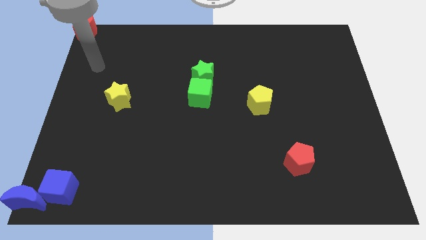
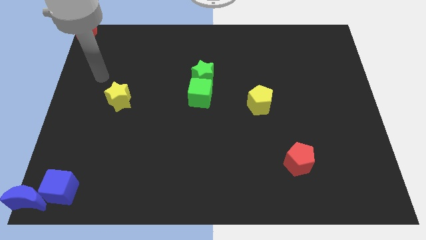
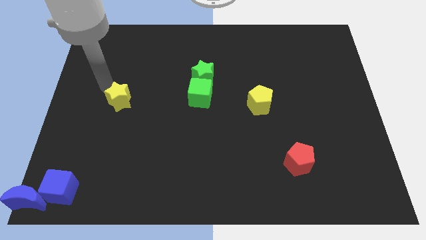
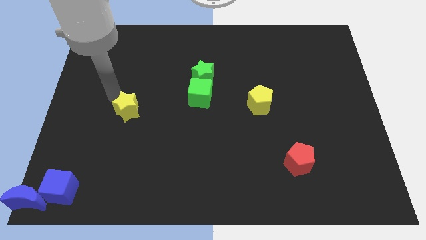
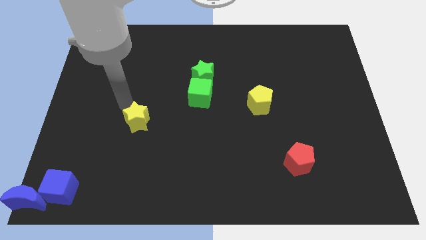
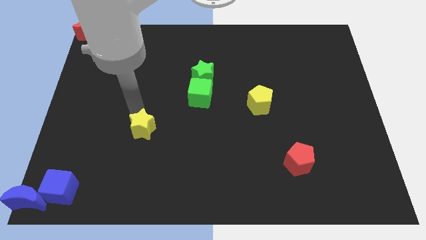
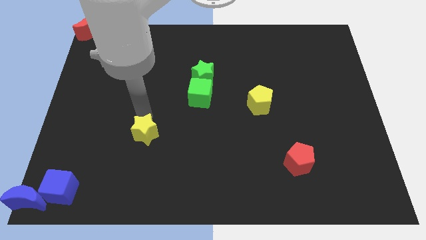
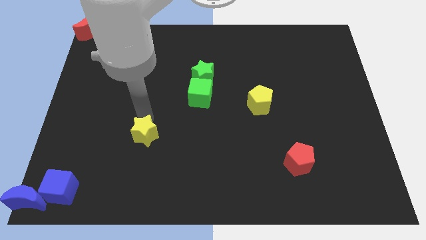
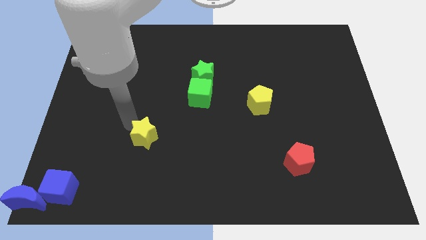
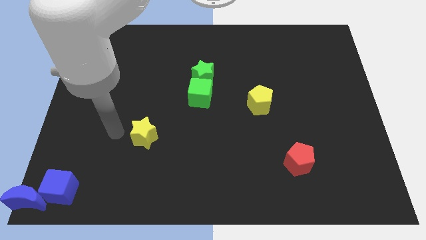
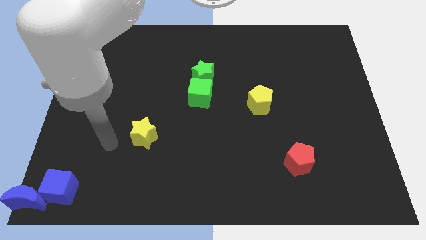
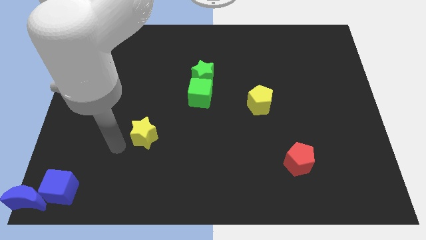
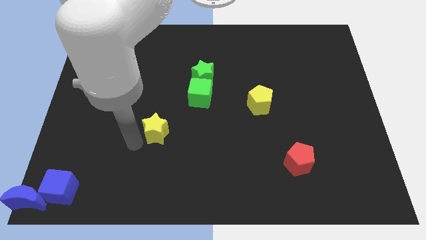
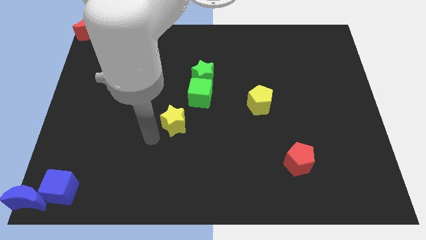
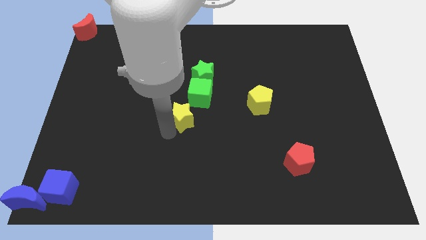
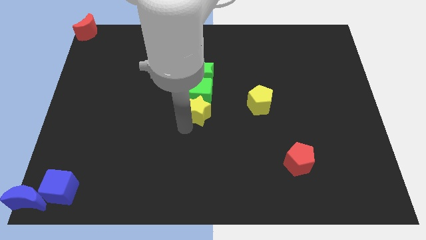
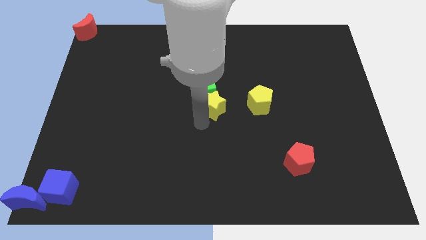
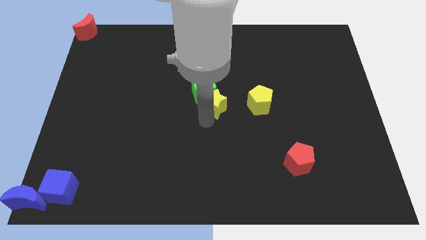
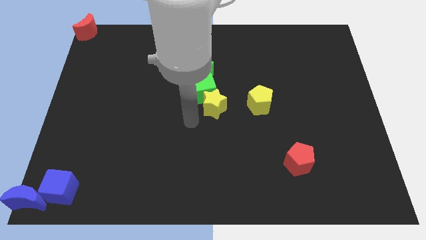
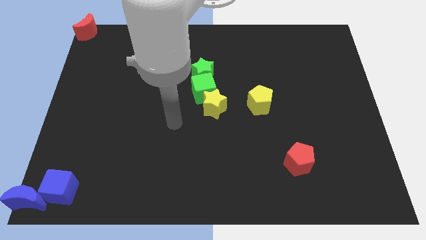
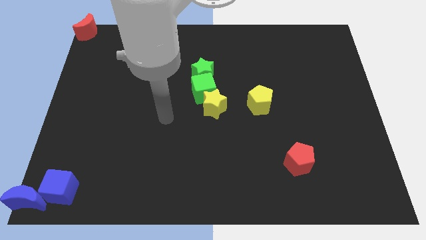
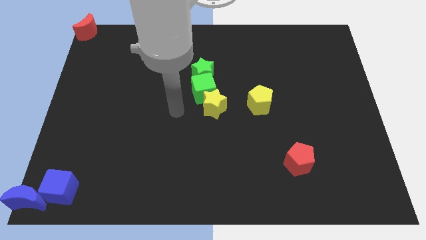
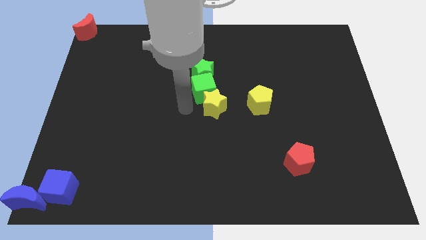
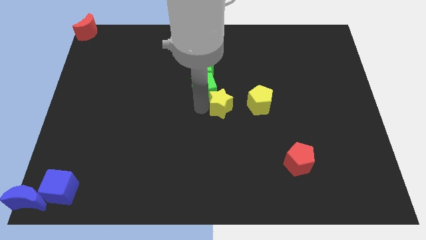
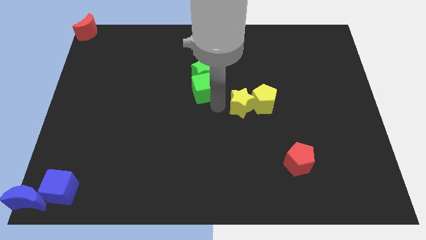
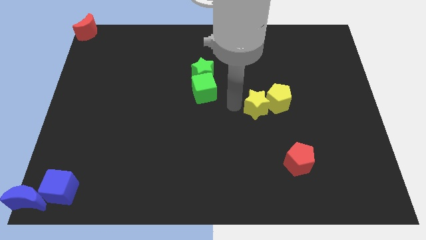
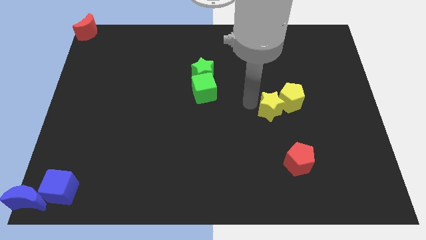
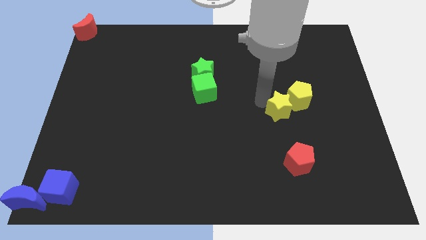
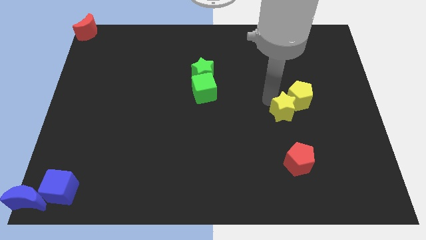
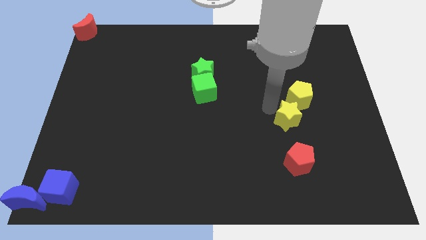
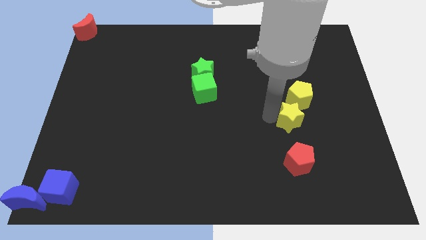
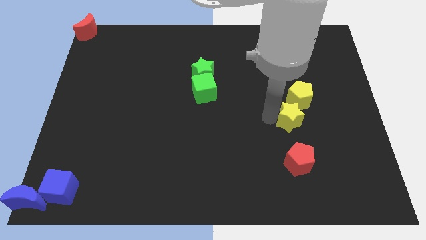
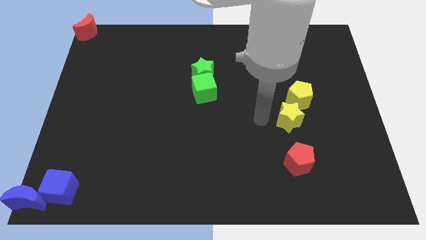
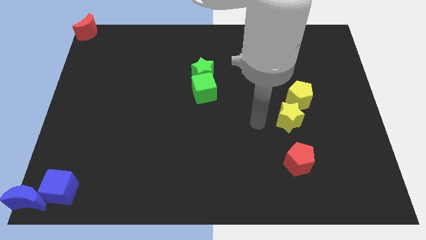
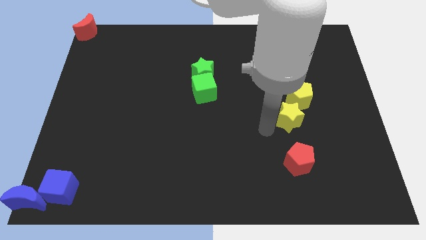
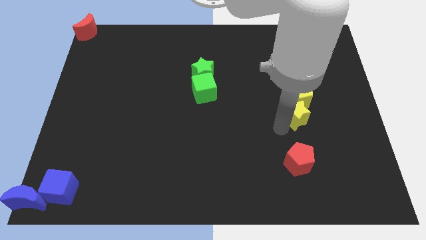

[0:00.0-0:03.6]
move the yellow star to the bottom of the yellow pentagon

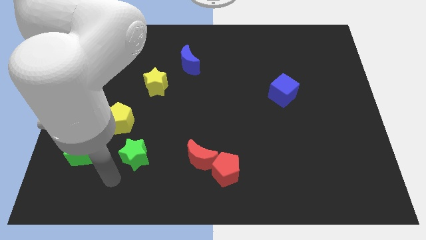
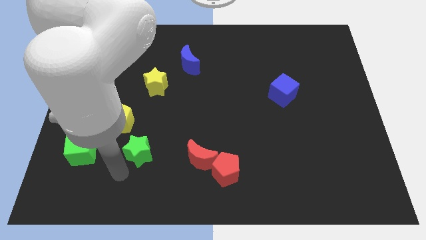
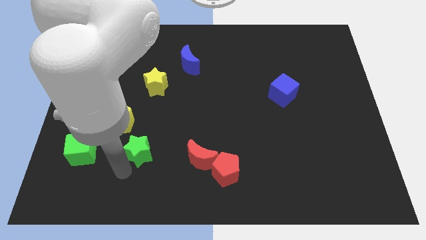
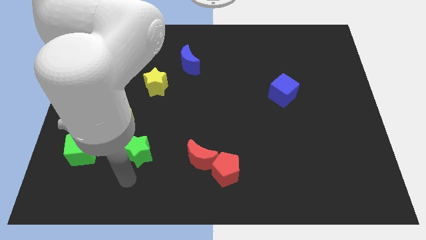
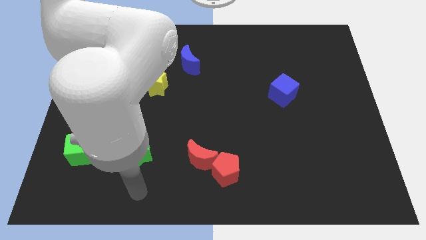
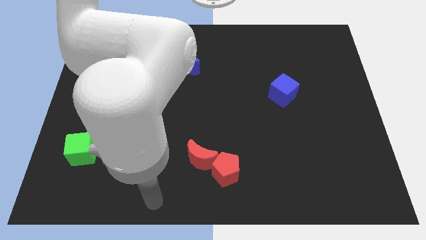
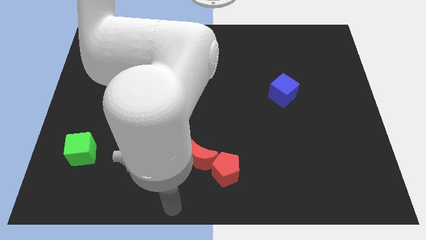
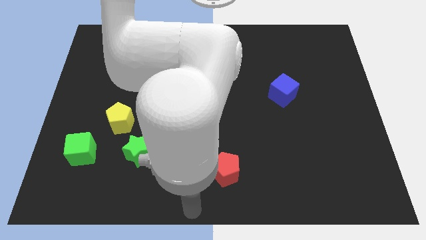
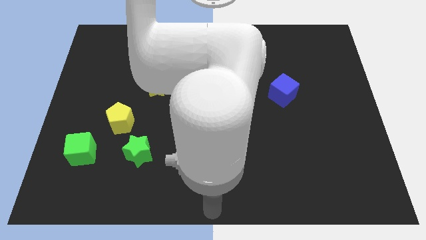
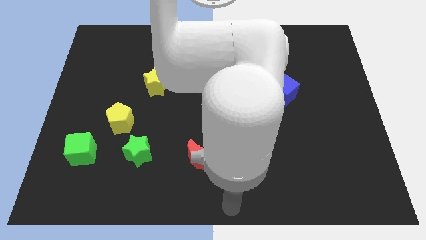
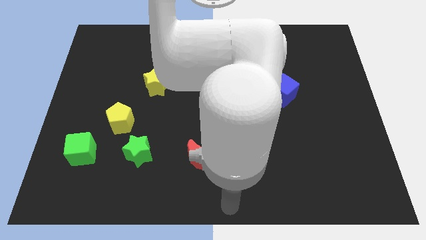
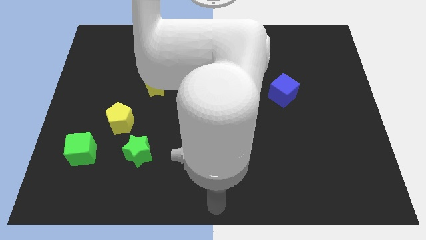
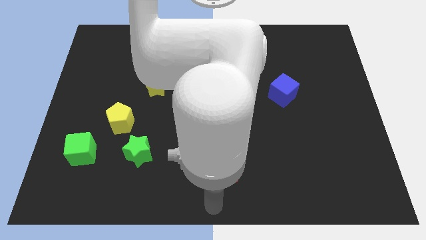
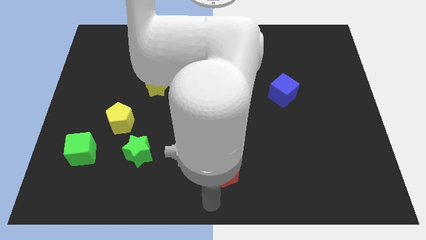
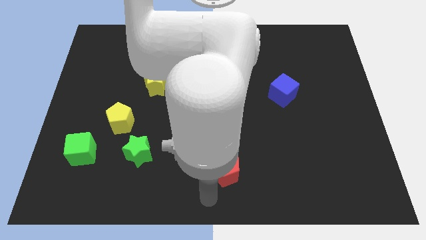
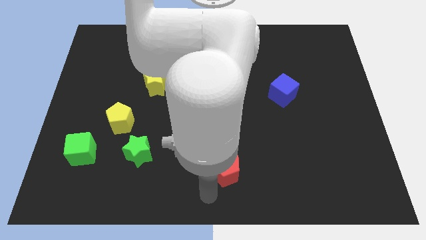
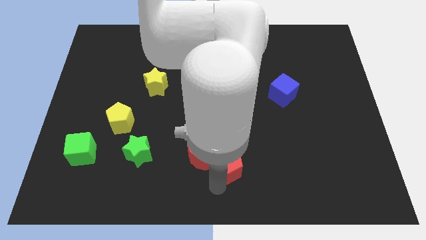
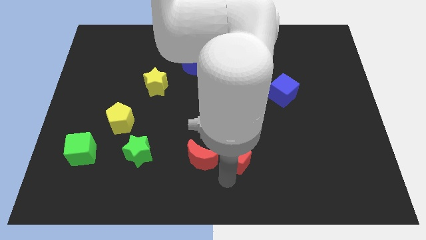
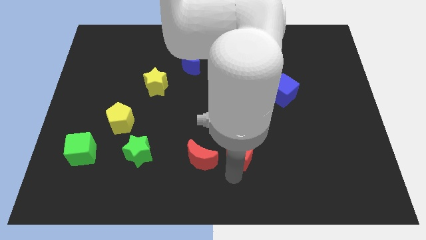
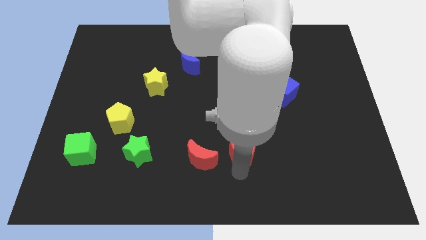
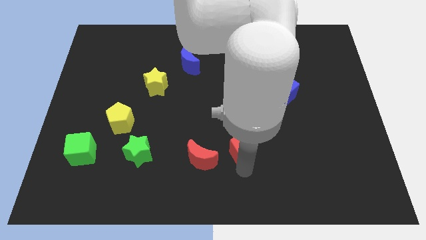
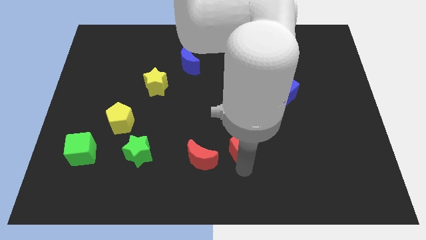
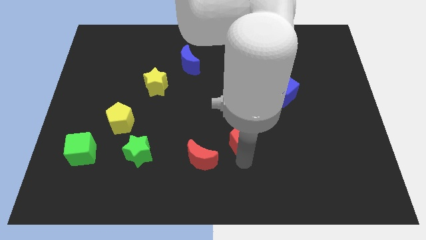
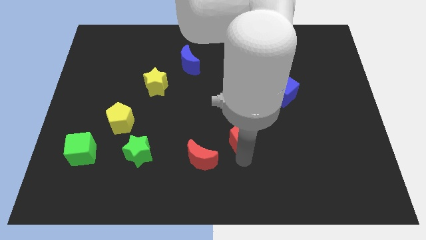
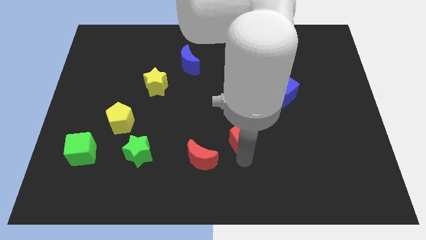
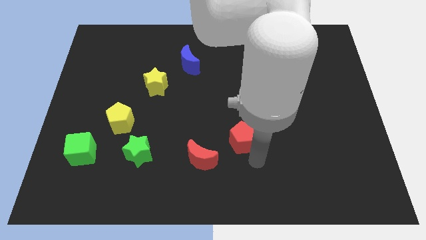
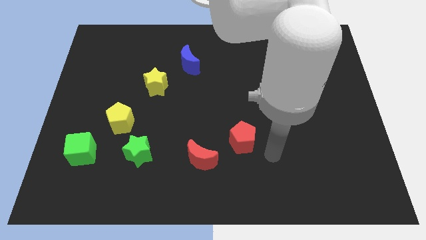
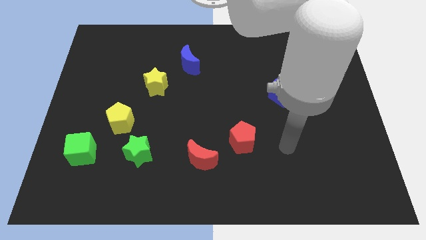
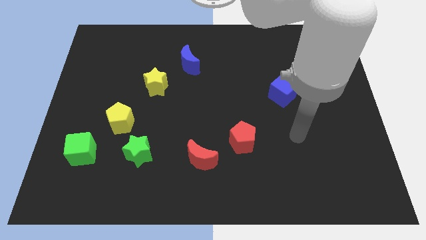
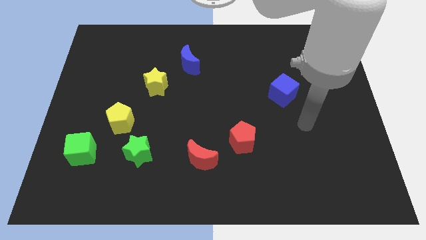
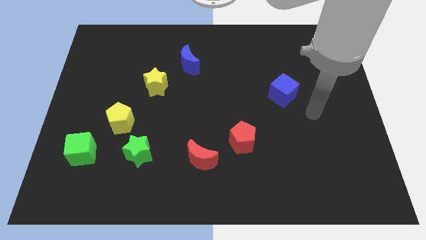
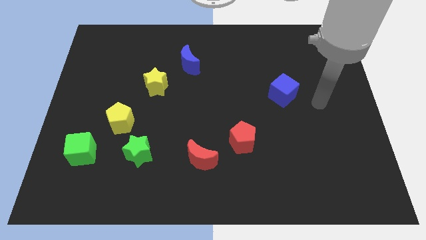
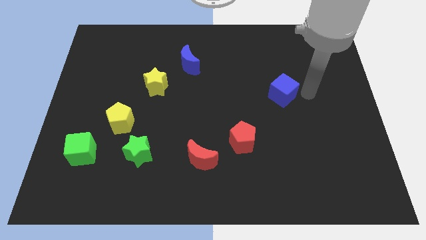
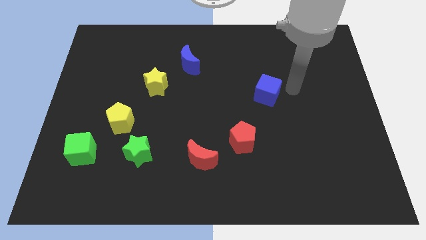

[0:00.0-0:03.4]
separate the red moon and the red pentagon

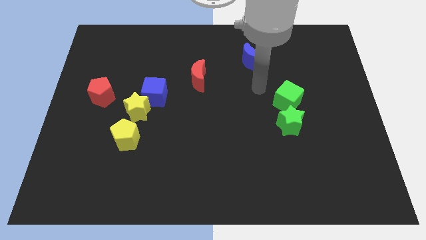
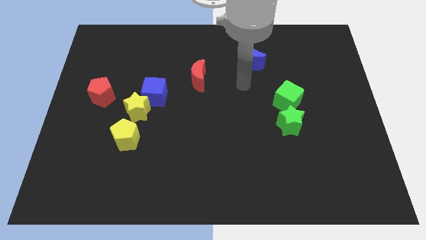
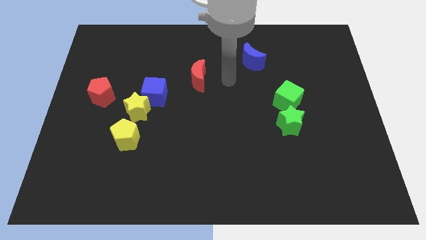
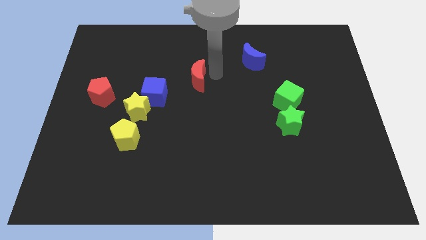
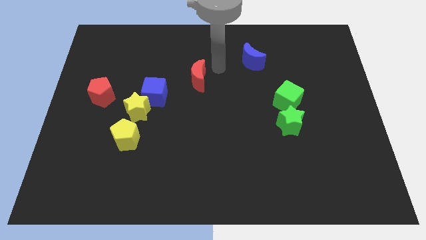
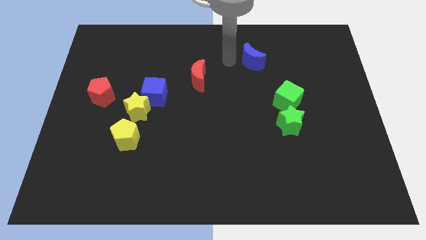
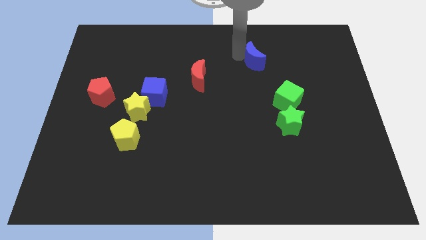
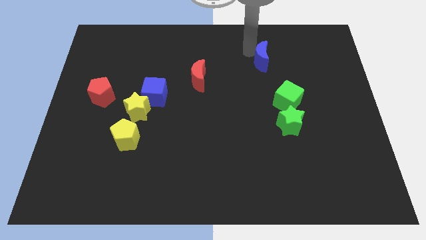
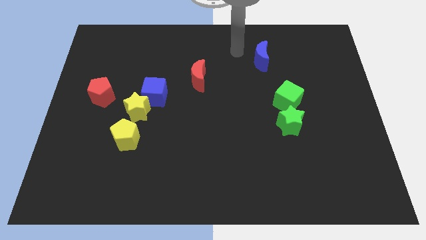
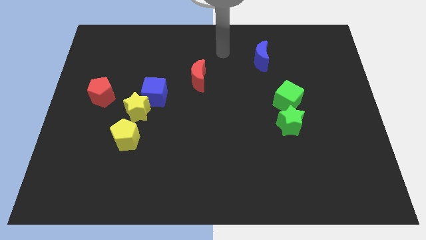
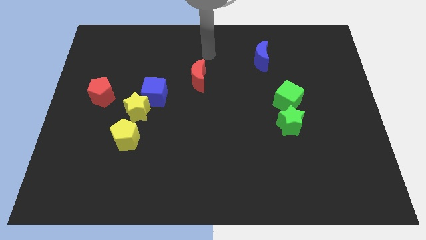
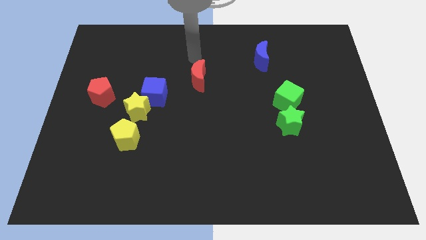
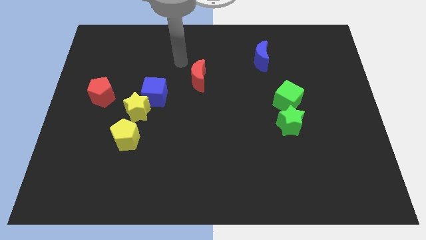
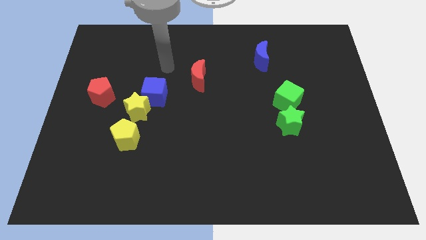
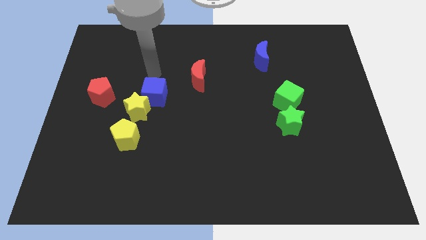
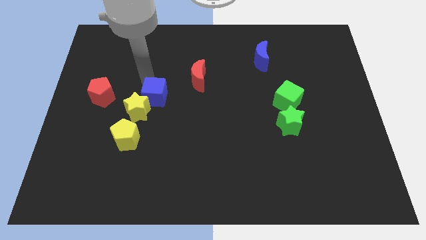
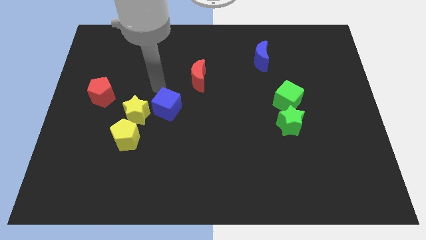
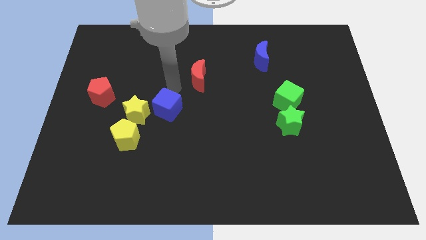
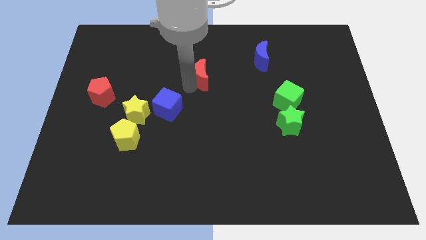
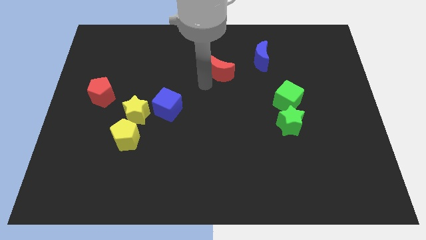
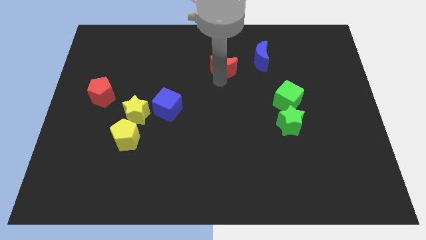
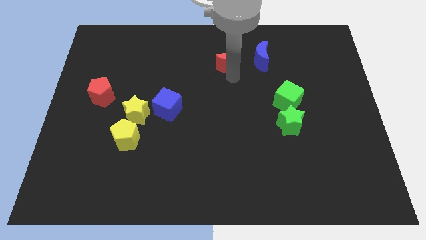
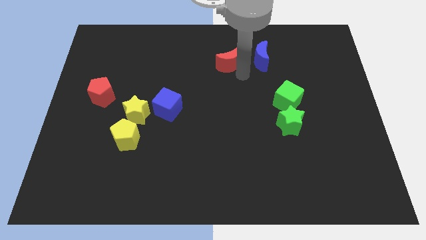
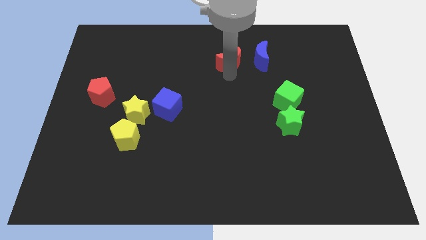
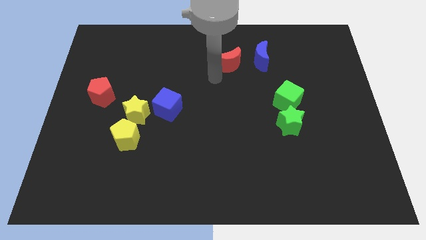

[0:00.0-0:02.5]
separate the blue cube from yellow star
